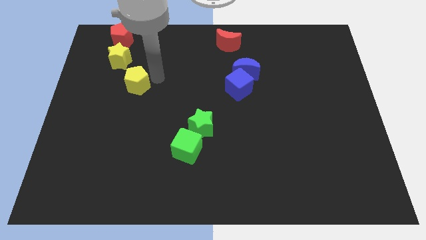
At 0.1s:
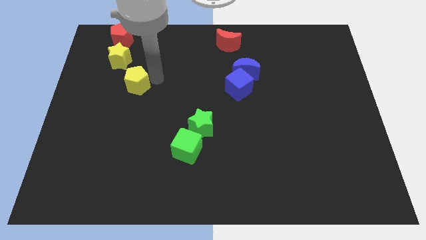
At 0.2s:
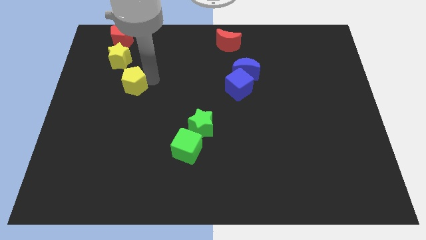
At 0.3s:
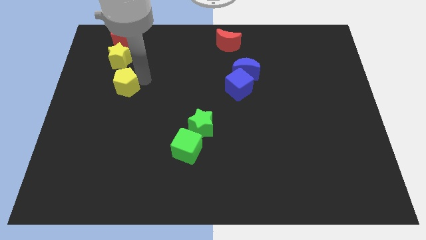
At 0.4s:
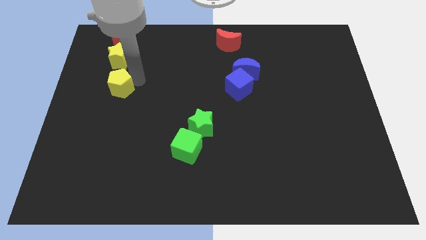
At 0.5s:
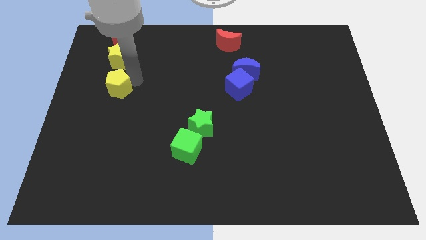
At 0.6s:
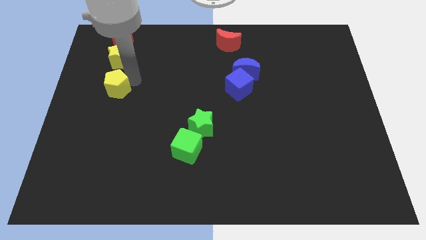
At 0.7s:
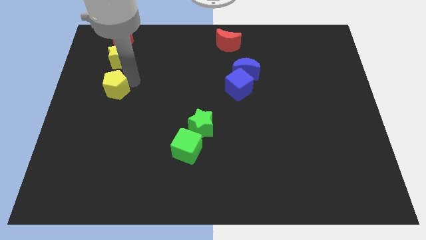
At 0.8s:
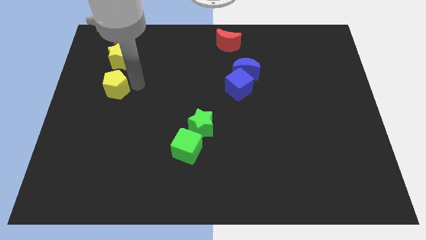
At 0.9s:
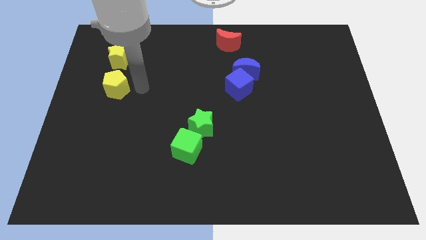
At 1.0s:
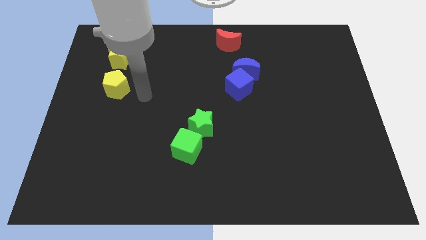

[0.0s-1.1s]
move the yellow pentagon below the yellow star

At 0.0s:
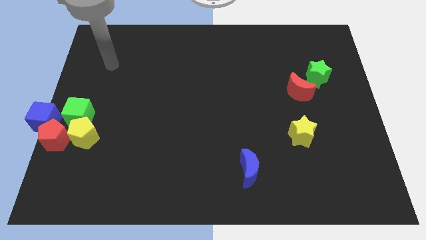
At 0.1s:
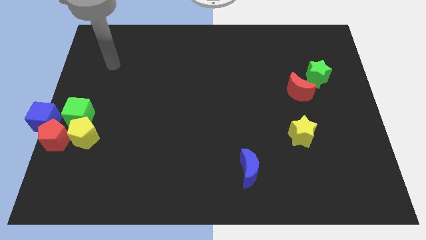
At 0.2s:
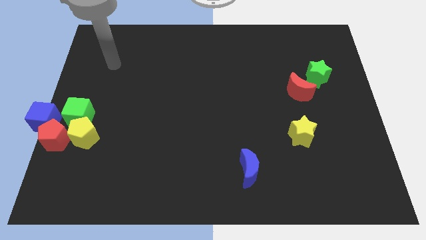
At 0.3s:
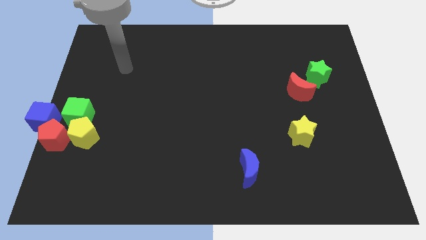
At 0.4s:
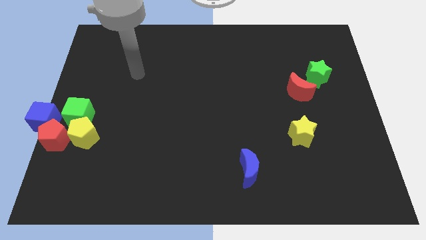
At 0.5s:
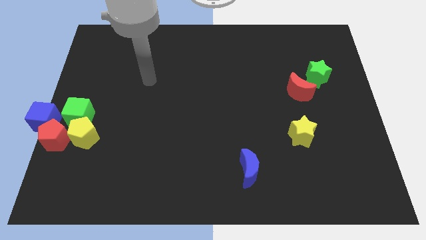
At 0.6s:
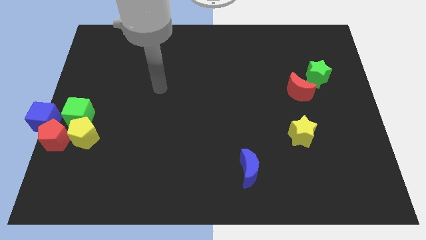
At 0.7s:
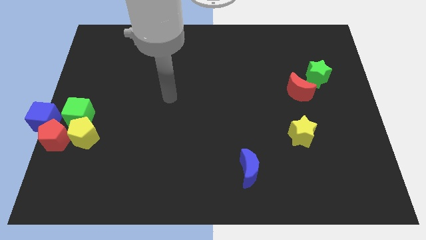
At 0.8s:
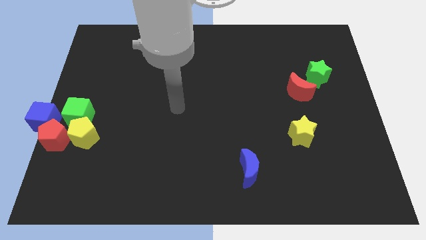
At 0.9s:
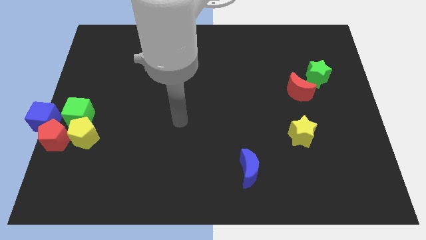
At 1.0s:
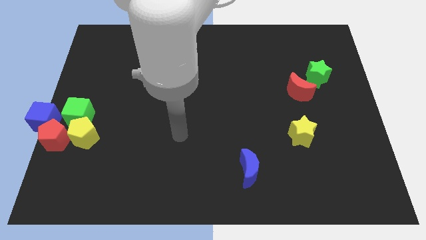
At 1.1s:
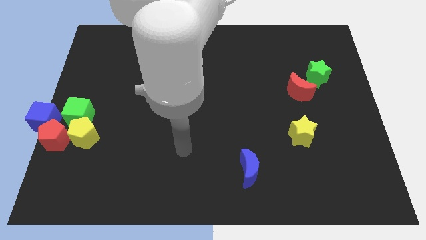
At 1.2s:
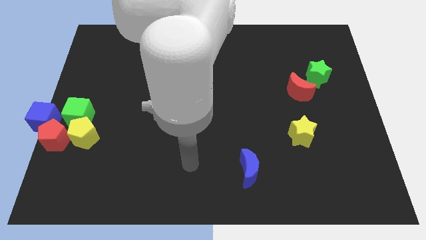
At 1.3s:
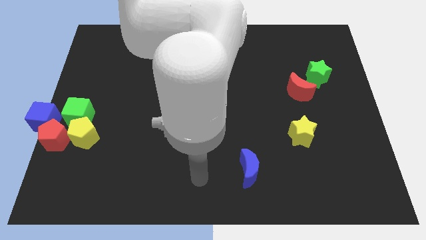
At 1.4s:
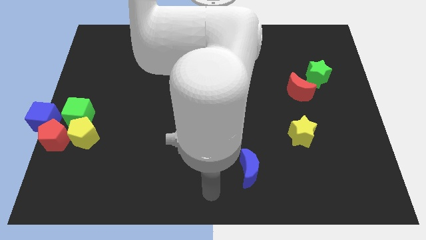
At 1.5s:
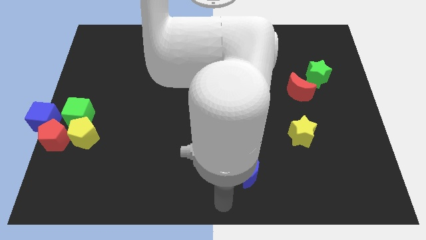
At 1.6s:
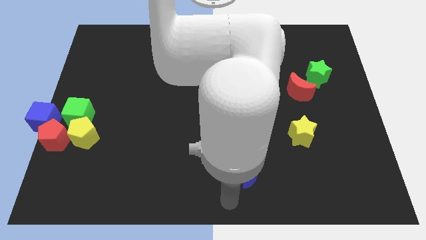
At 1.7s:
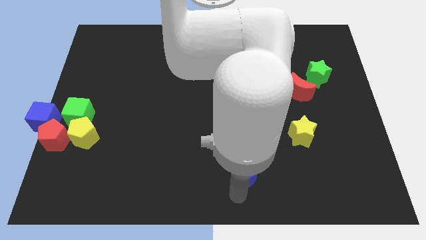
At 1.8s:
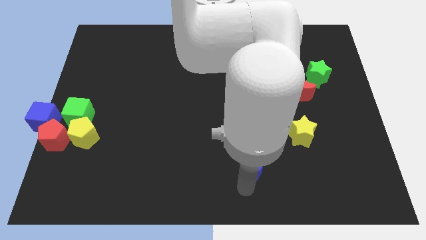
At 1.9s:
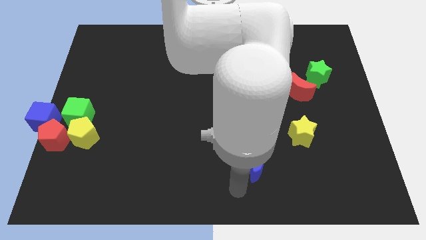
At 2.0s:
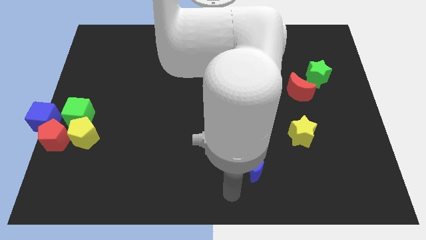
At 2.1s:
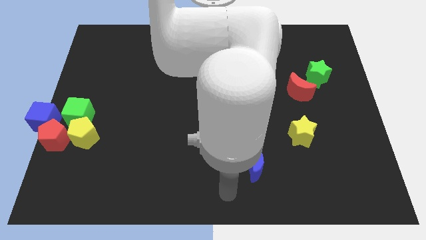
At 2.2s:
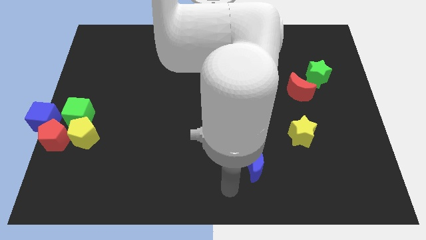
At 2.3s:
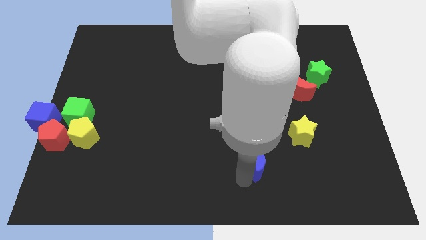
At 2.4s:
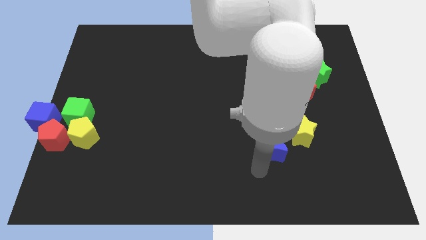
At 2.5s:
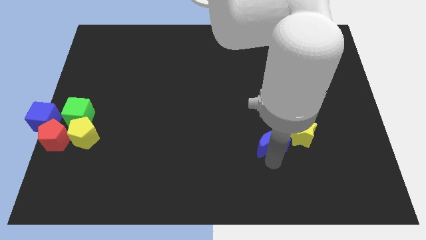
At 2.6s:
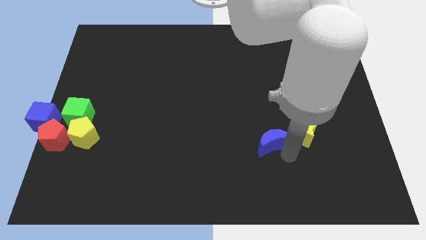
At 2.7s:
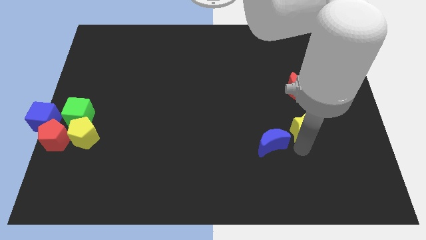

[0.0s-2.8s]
move your arm and push the blue moon into yellow star to the left

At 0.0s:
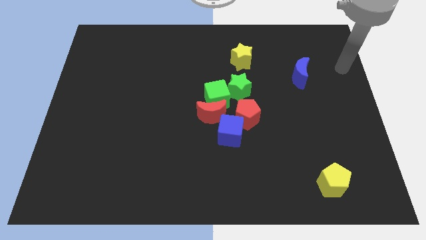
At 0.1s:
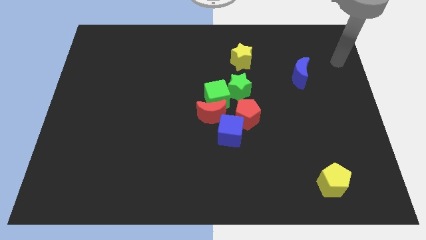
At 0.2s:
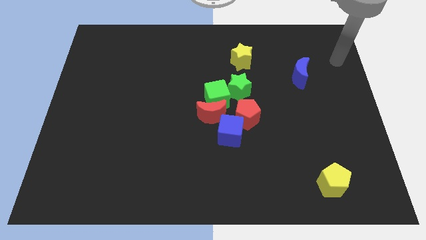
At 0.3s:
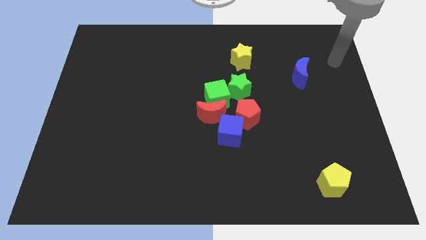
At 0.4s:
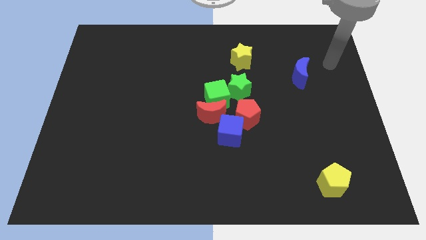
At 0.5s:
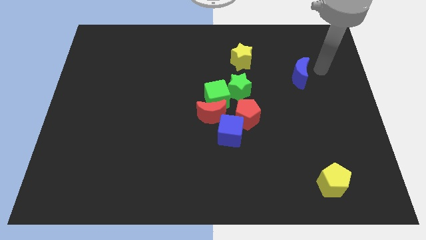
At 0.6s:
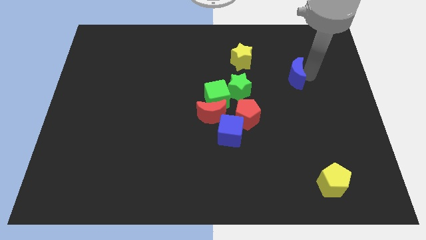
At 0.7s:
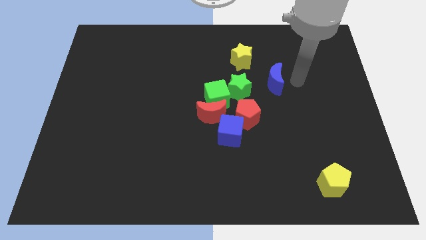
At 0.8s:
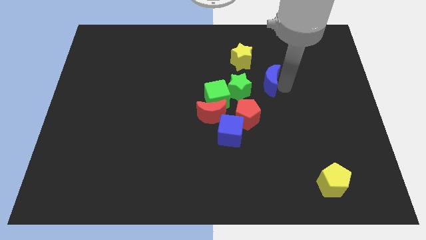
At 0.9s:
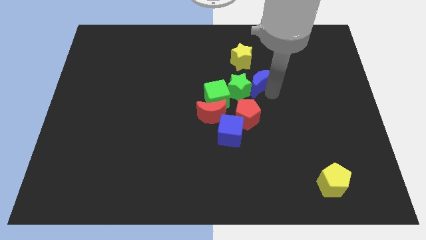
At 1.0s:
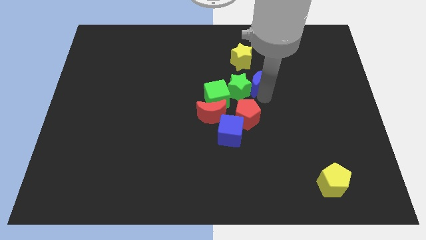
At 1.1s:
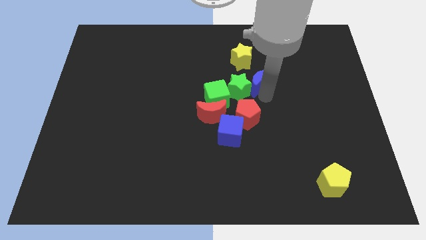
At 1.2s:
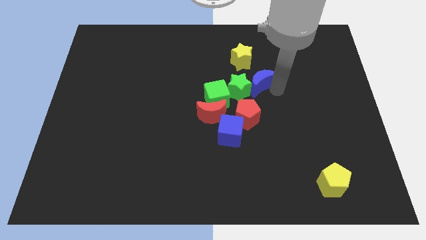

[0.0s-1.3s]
push the blue crescent towards the green star

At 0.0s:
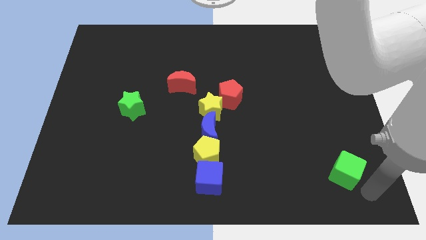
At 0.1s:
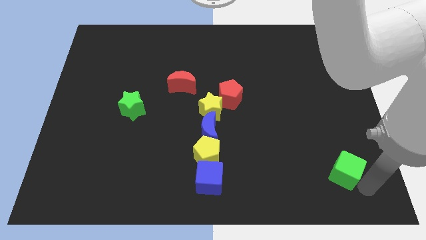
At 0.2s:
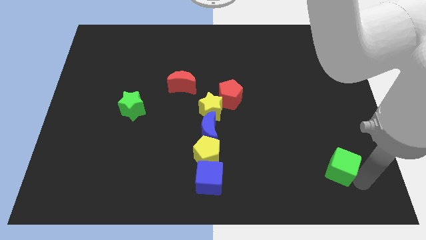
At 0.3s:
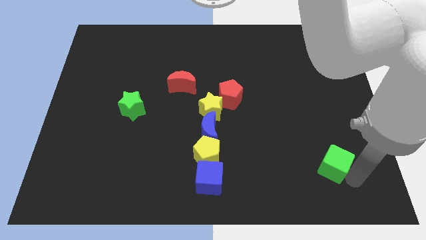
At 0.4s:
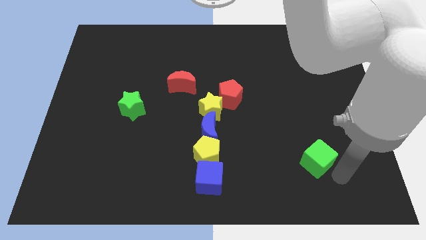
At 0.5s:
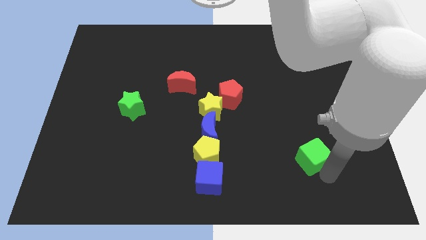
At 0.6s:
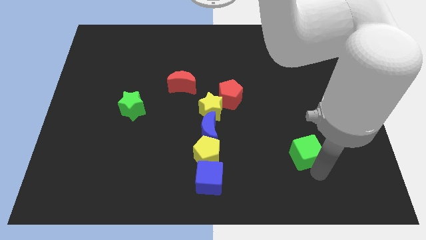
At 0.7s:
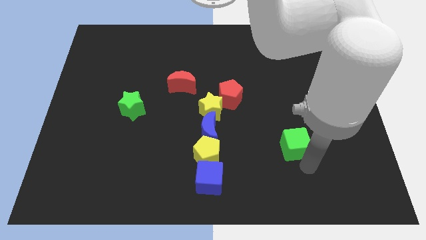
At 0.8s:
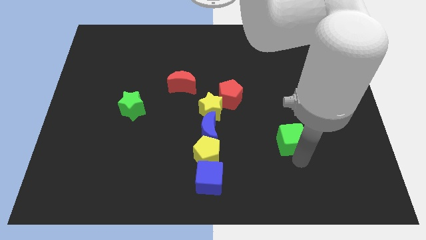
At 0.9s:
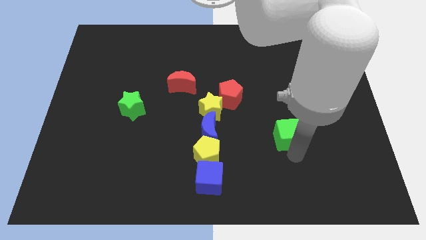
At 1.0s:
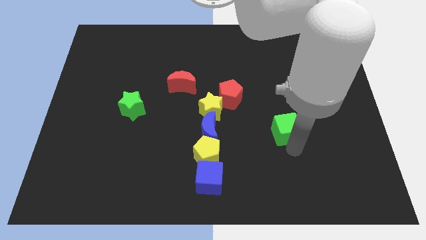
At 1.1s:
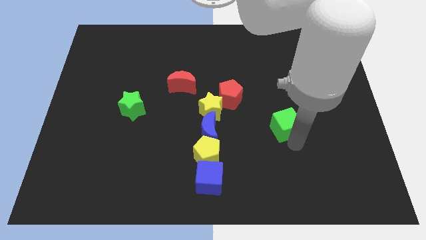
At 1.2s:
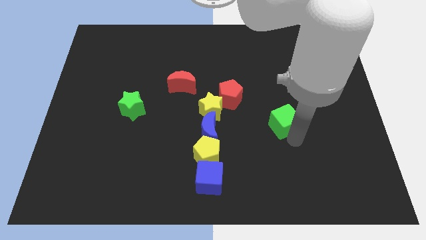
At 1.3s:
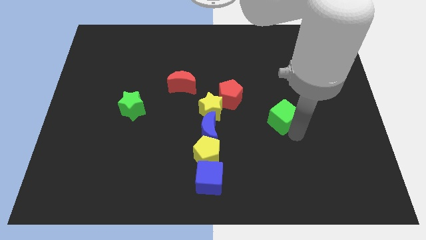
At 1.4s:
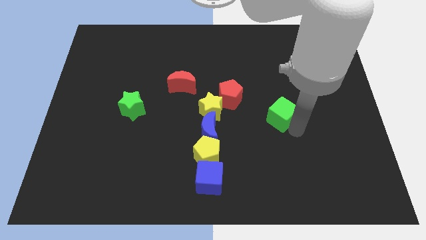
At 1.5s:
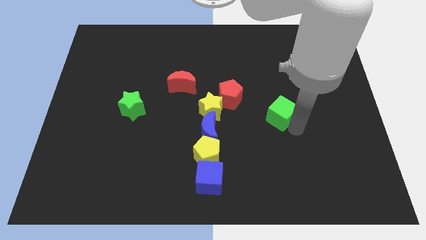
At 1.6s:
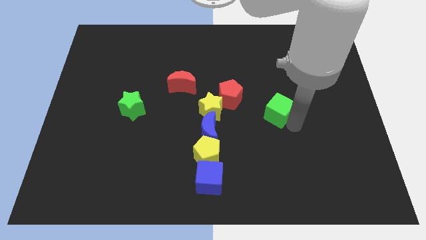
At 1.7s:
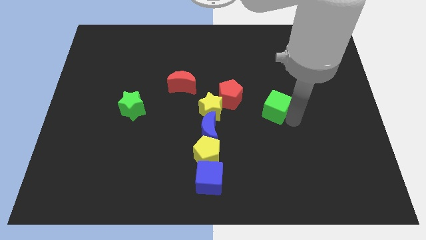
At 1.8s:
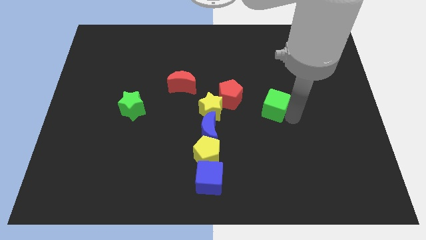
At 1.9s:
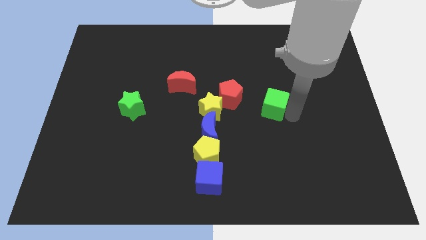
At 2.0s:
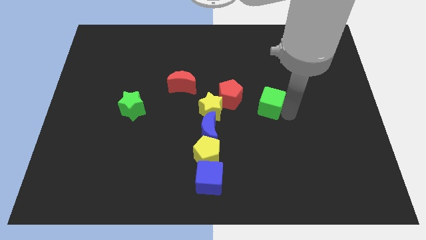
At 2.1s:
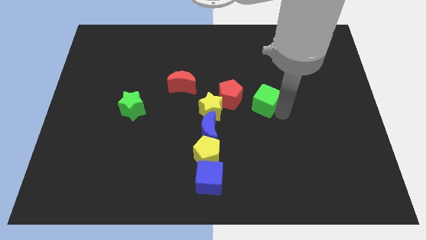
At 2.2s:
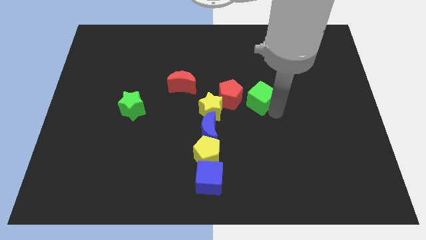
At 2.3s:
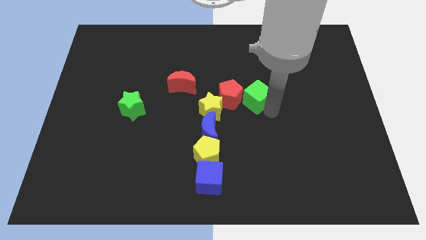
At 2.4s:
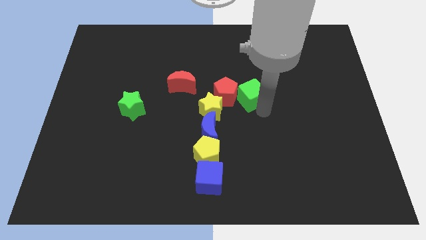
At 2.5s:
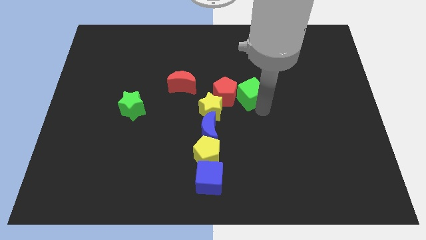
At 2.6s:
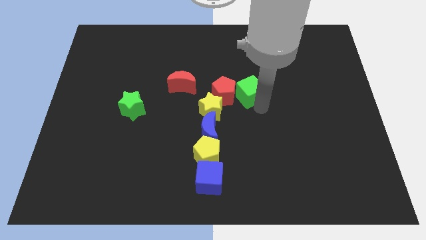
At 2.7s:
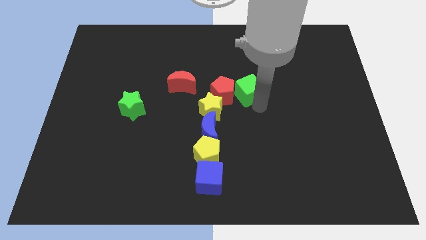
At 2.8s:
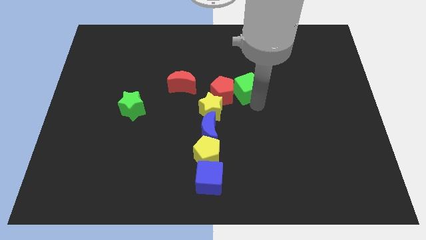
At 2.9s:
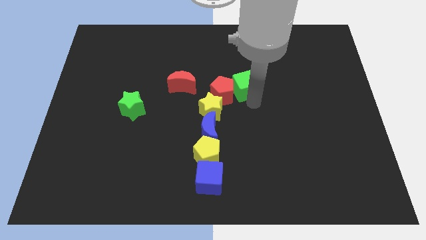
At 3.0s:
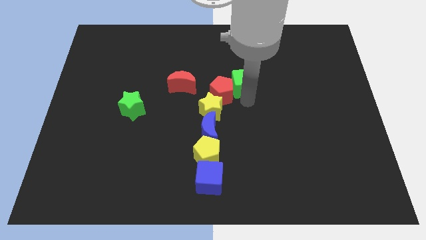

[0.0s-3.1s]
add green cube into red pentagon

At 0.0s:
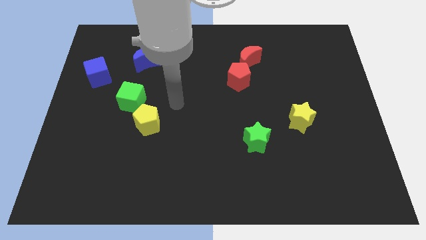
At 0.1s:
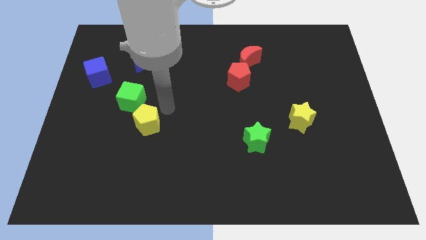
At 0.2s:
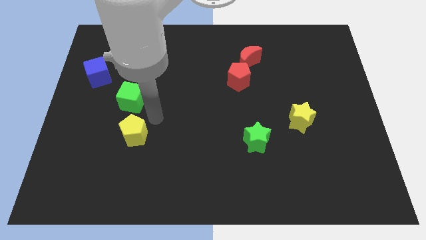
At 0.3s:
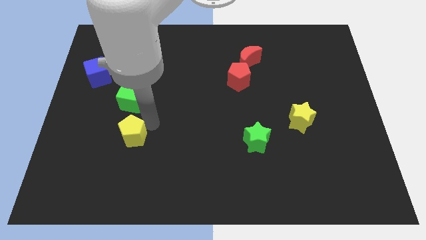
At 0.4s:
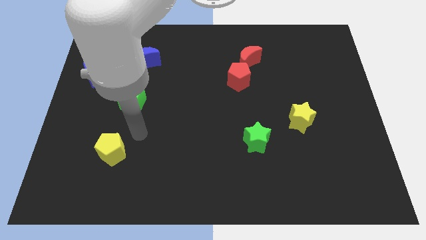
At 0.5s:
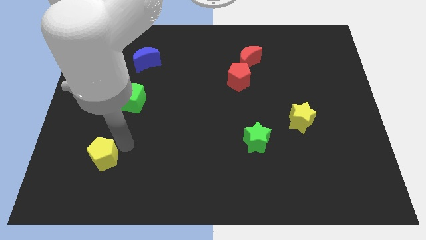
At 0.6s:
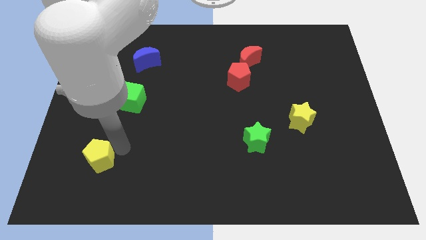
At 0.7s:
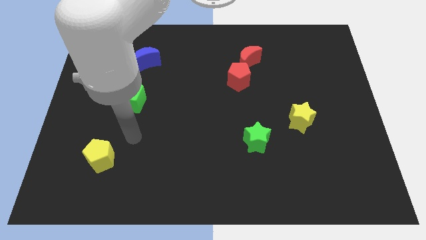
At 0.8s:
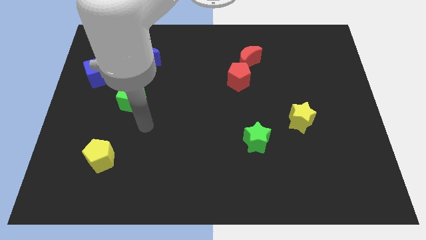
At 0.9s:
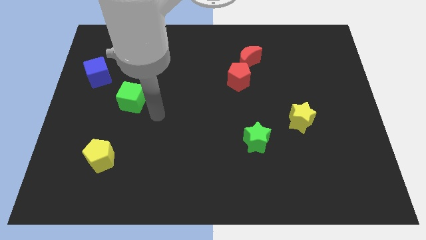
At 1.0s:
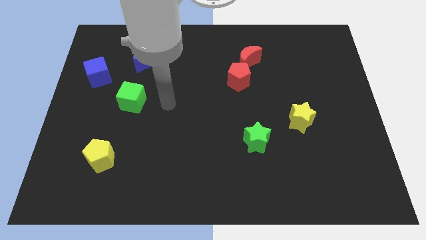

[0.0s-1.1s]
move the yellow pentagon slightly to the bottom left of the board
